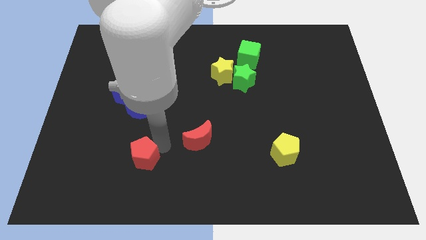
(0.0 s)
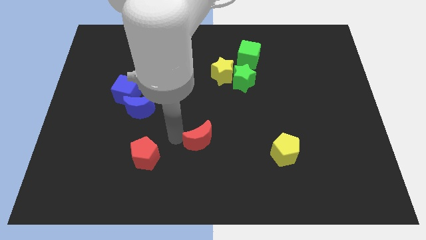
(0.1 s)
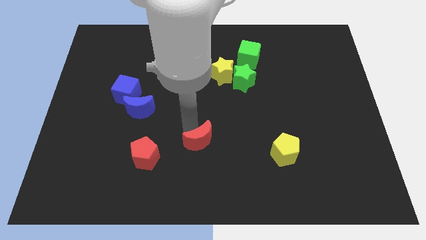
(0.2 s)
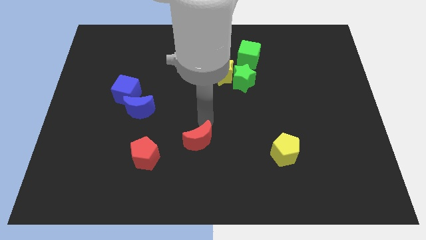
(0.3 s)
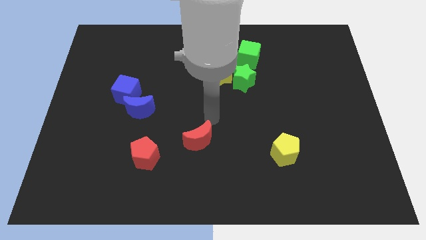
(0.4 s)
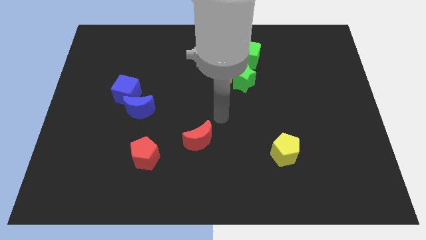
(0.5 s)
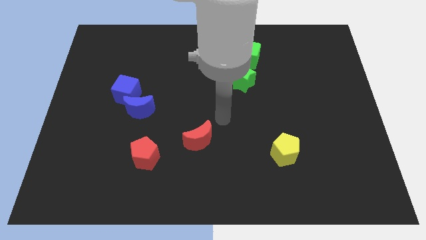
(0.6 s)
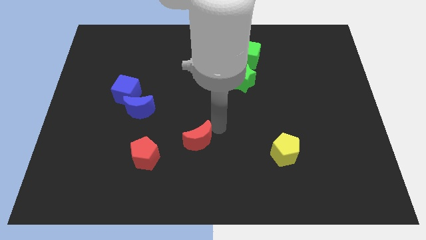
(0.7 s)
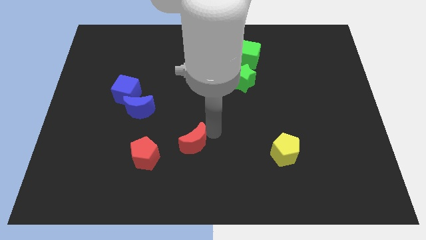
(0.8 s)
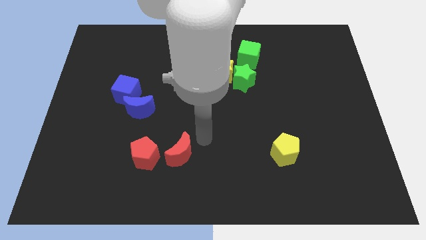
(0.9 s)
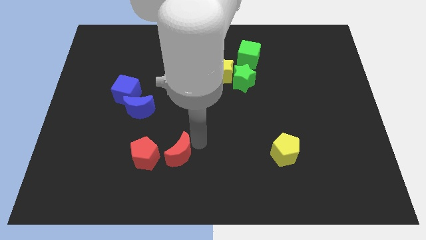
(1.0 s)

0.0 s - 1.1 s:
put the red crescent close to the red pentagon

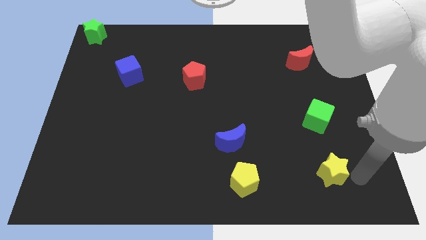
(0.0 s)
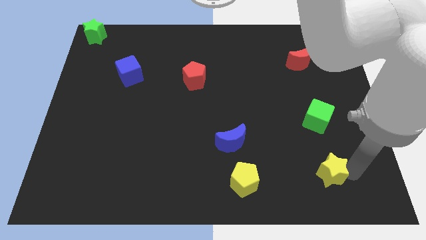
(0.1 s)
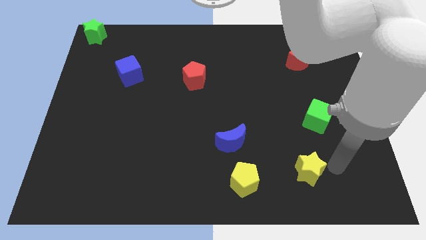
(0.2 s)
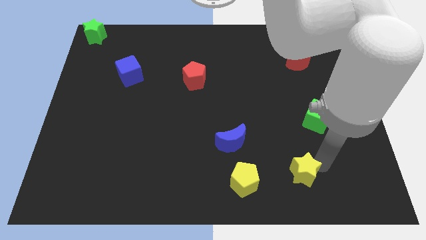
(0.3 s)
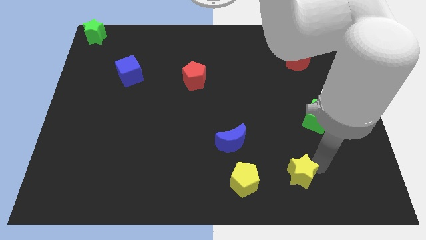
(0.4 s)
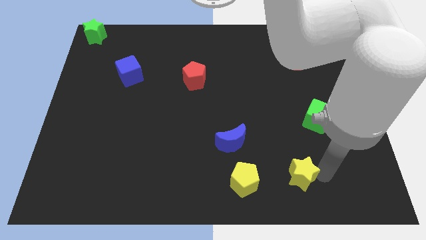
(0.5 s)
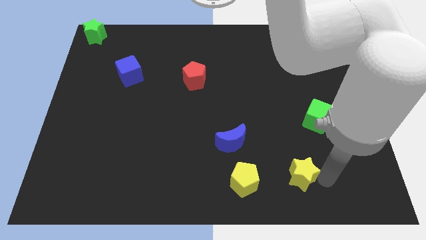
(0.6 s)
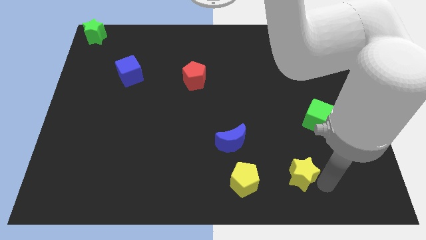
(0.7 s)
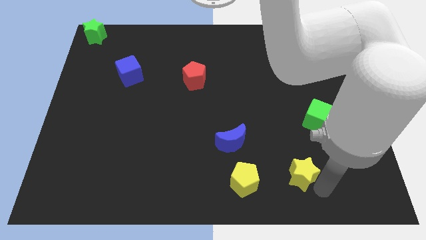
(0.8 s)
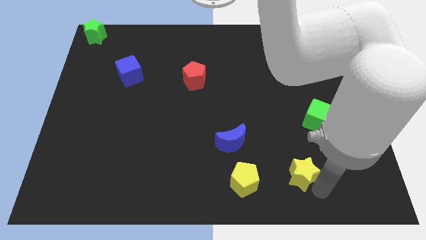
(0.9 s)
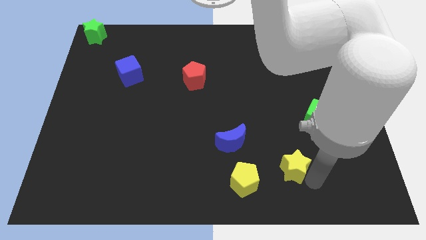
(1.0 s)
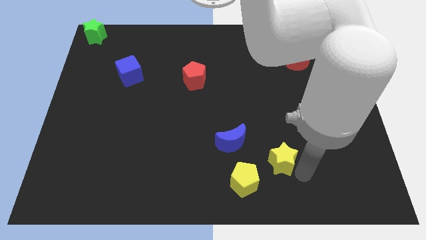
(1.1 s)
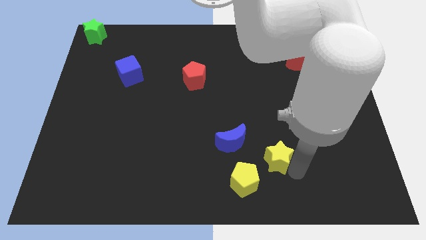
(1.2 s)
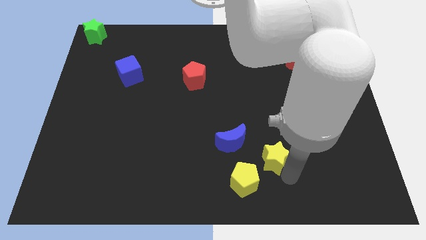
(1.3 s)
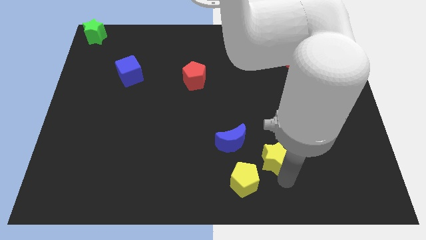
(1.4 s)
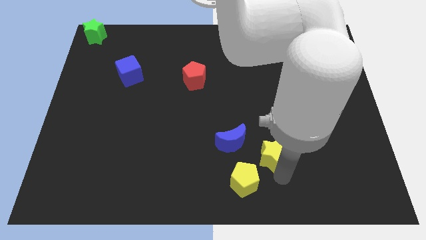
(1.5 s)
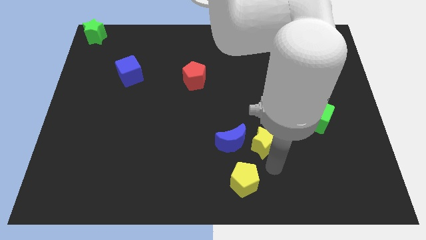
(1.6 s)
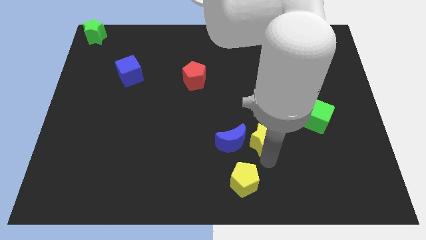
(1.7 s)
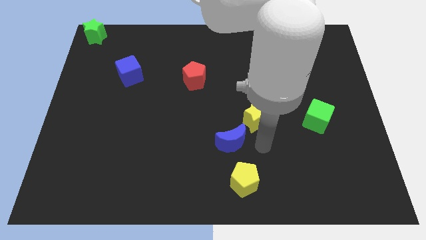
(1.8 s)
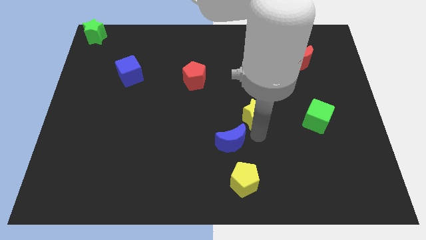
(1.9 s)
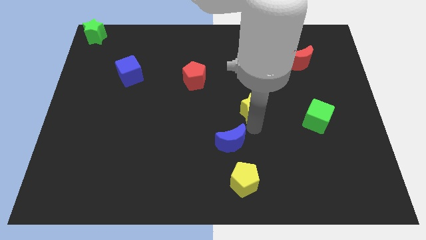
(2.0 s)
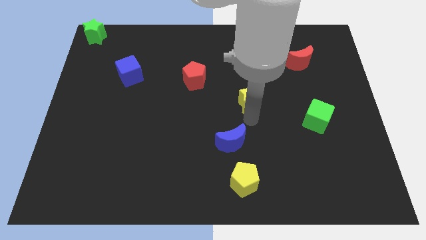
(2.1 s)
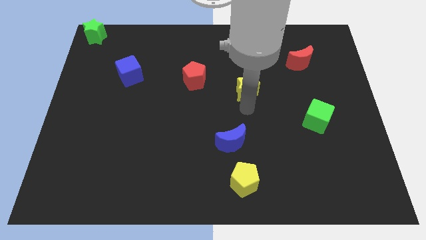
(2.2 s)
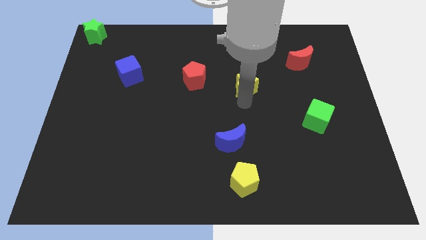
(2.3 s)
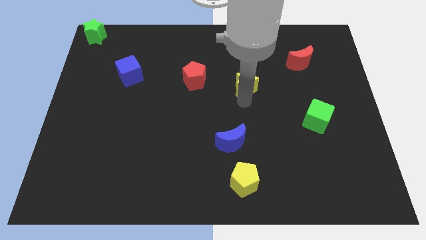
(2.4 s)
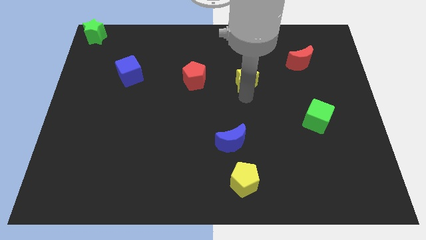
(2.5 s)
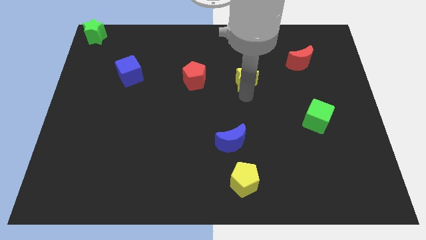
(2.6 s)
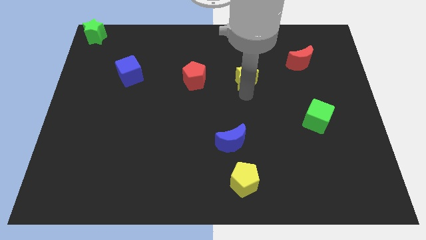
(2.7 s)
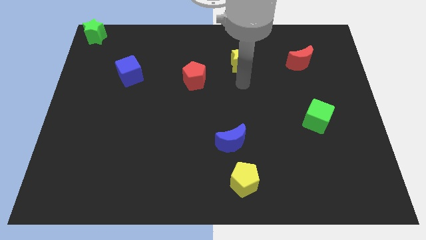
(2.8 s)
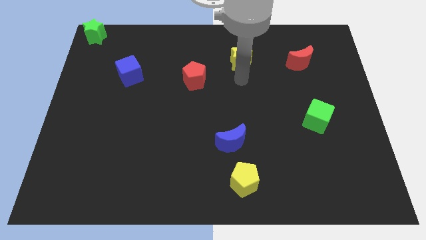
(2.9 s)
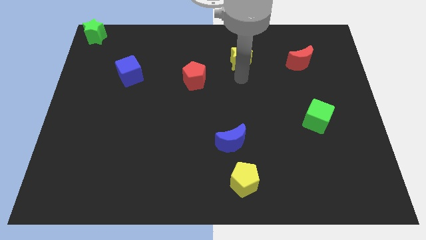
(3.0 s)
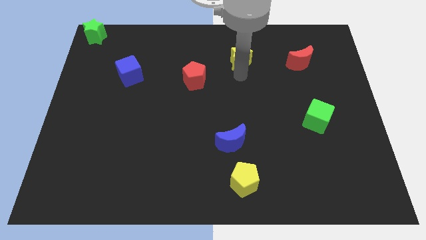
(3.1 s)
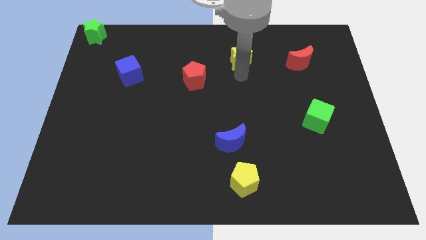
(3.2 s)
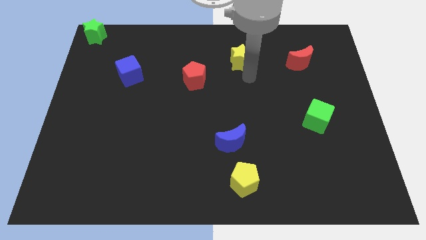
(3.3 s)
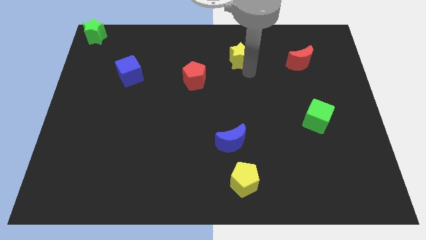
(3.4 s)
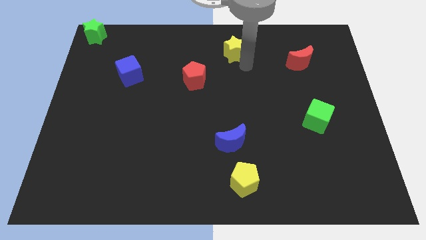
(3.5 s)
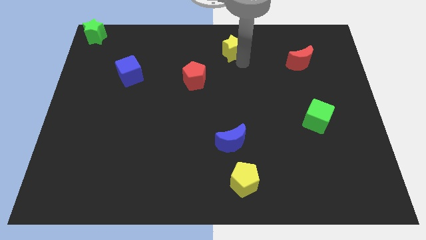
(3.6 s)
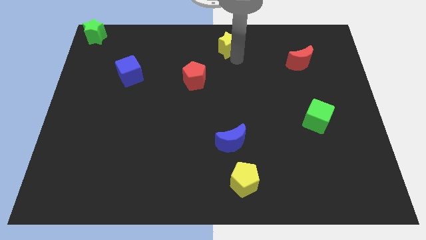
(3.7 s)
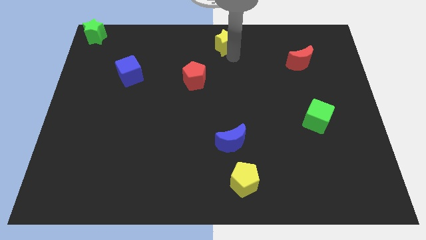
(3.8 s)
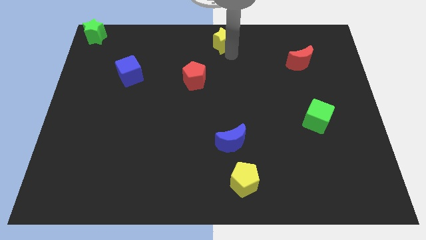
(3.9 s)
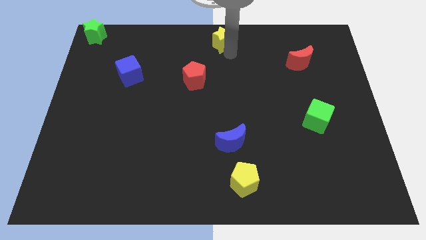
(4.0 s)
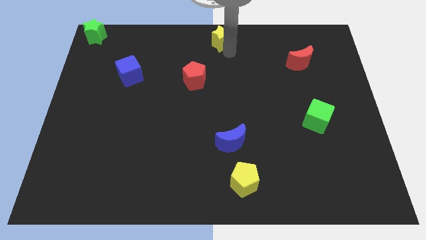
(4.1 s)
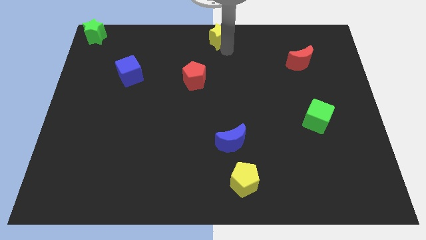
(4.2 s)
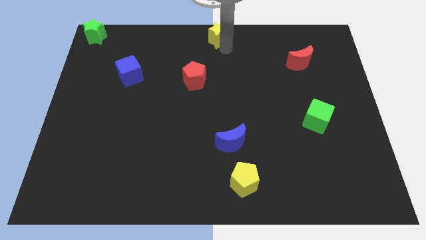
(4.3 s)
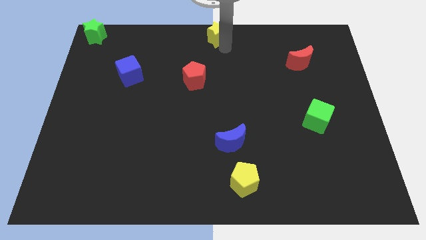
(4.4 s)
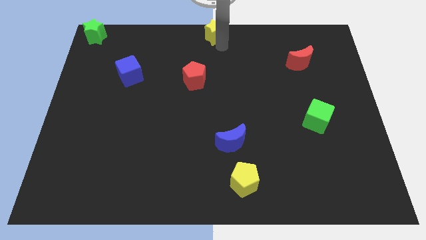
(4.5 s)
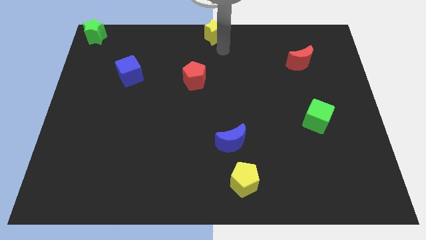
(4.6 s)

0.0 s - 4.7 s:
push the yellow star to the top center of the board

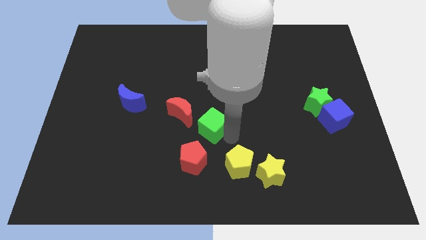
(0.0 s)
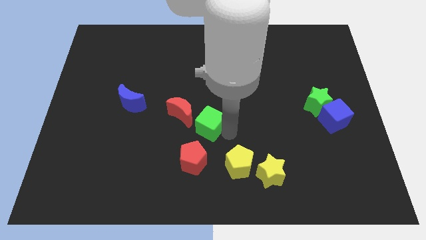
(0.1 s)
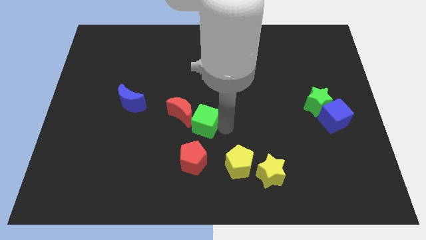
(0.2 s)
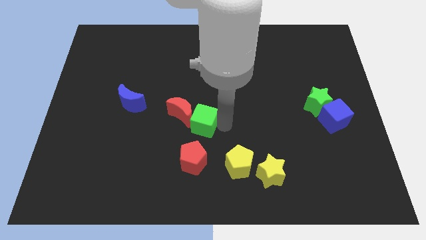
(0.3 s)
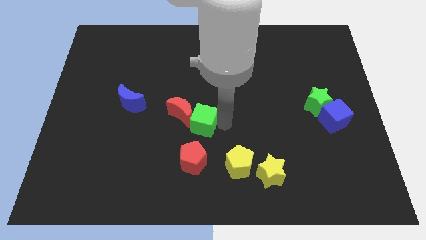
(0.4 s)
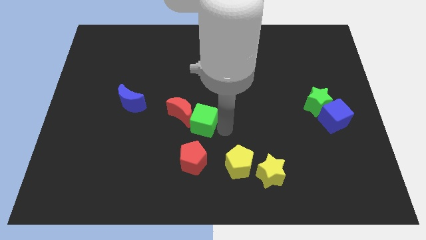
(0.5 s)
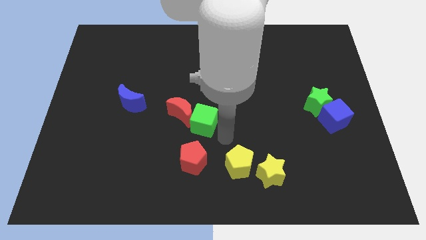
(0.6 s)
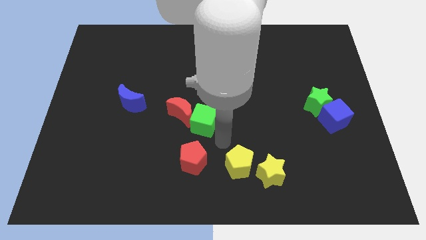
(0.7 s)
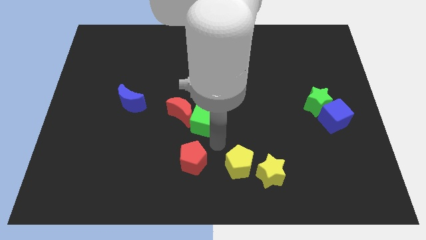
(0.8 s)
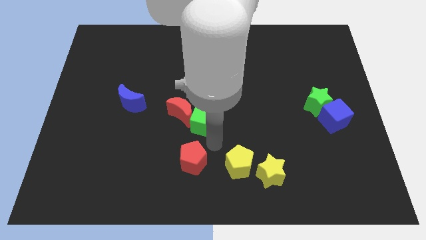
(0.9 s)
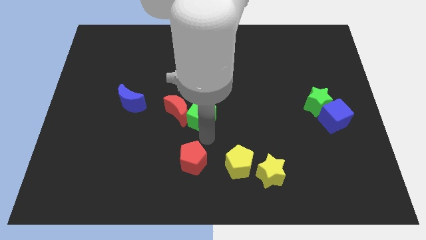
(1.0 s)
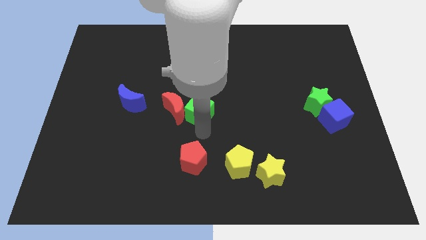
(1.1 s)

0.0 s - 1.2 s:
push the green cube into the red moon

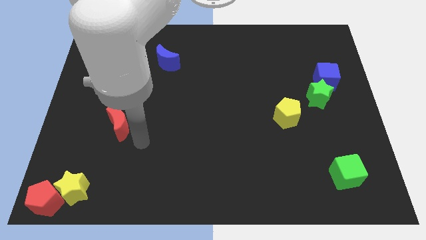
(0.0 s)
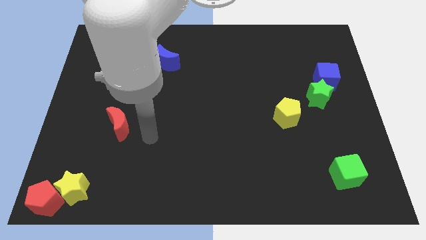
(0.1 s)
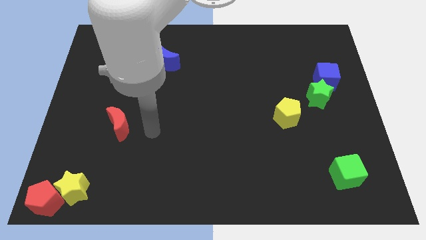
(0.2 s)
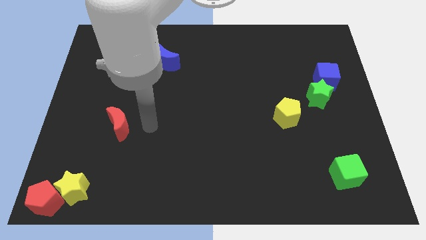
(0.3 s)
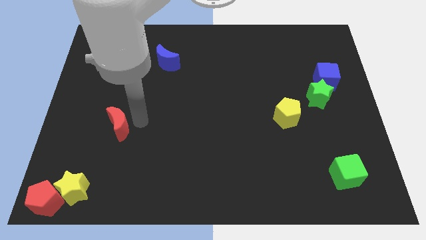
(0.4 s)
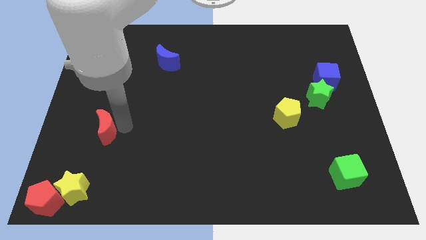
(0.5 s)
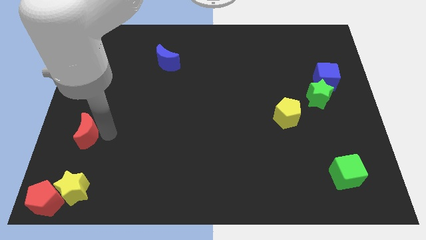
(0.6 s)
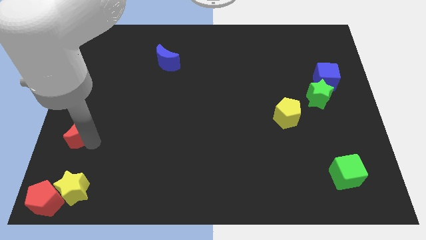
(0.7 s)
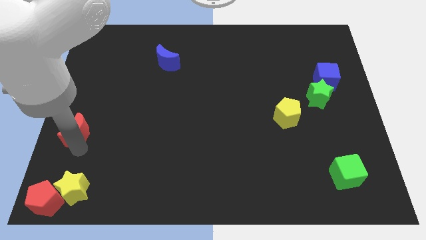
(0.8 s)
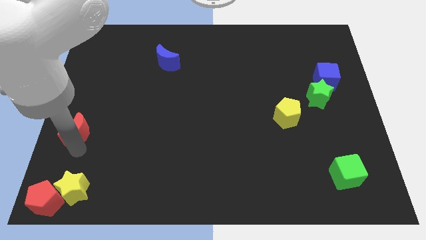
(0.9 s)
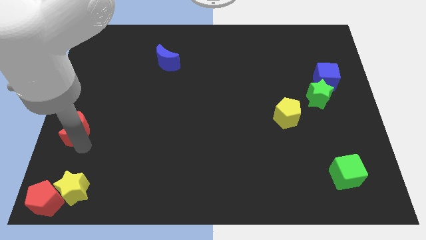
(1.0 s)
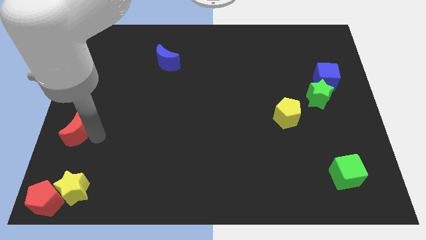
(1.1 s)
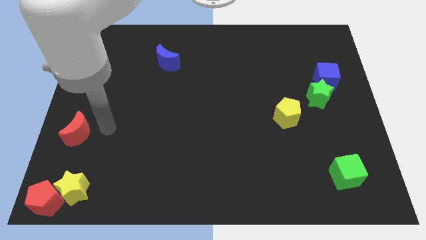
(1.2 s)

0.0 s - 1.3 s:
move the red moon into the center left

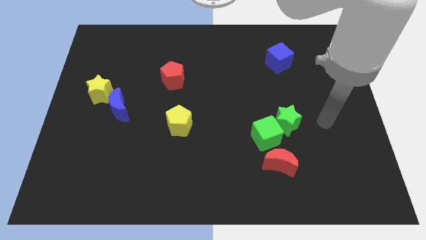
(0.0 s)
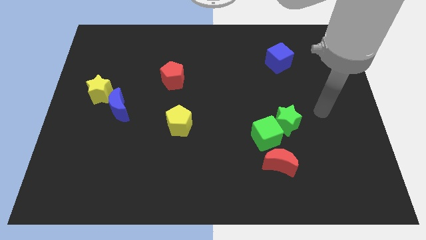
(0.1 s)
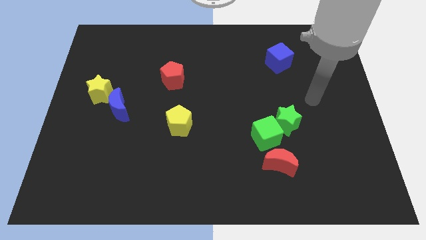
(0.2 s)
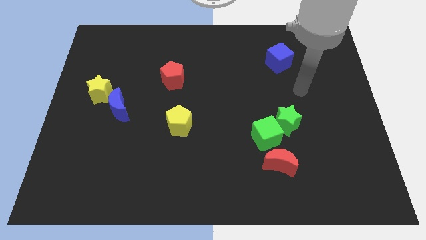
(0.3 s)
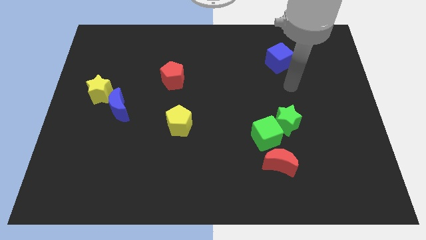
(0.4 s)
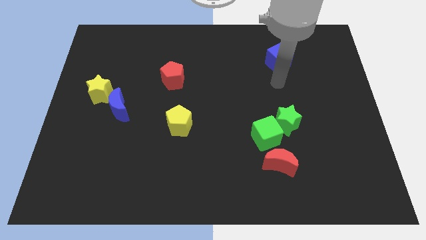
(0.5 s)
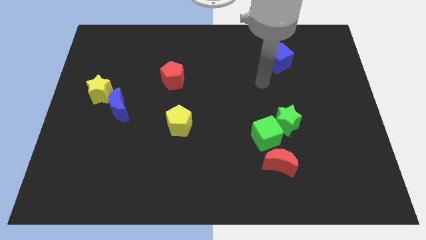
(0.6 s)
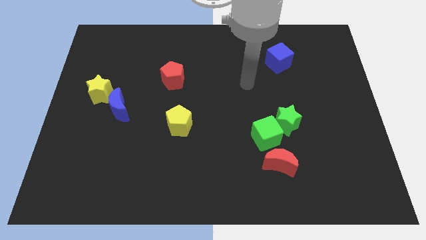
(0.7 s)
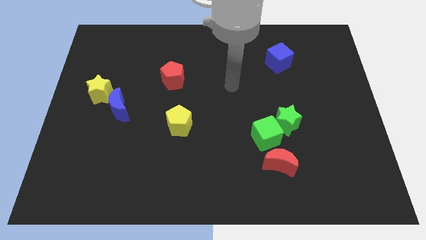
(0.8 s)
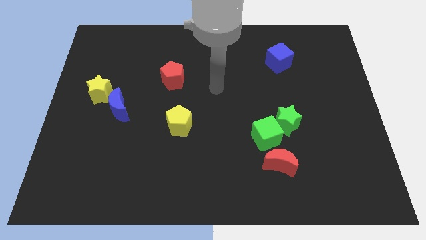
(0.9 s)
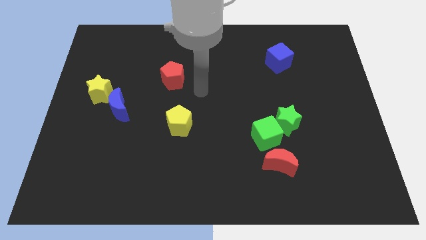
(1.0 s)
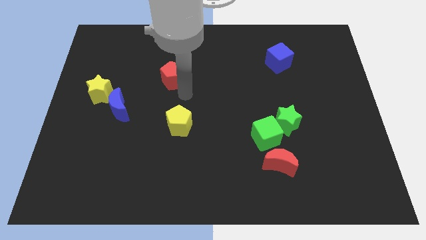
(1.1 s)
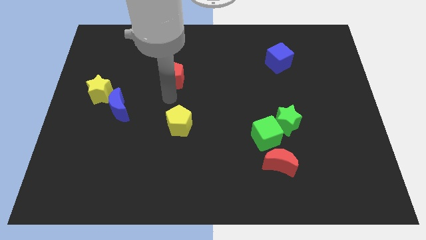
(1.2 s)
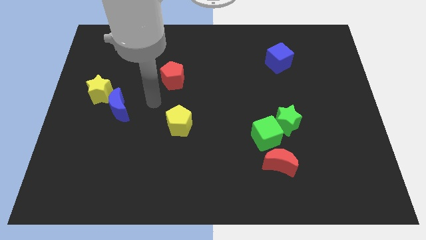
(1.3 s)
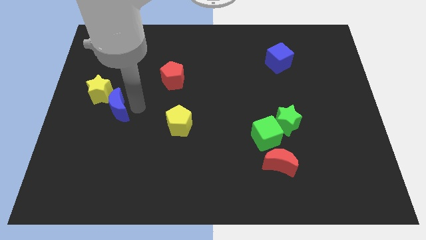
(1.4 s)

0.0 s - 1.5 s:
place your arm at the right of the blue crescent
